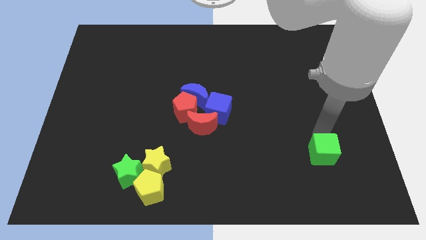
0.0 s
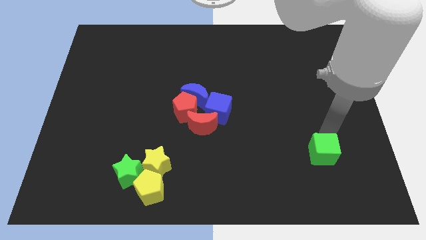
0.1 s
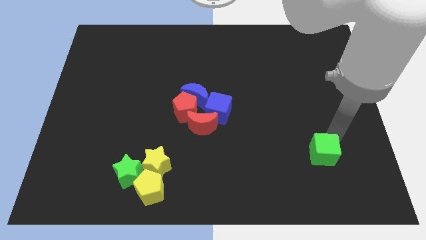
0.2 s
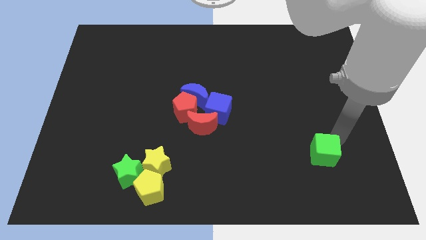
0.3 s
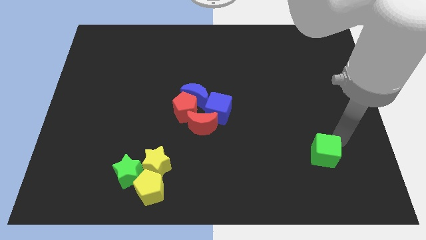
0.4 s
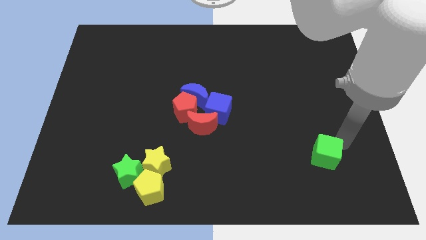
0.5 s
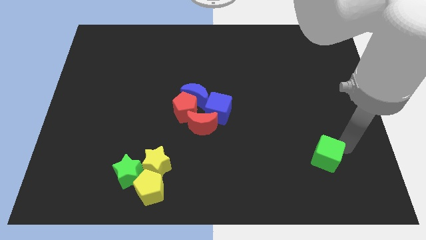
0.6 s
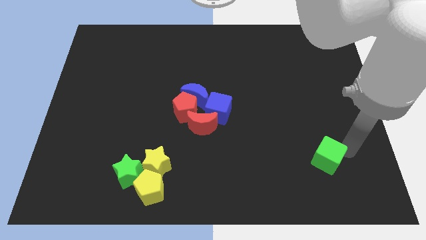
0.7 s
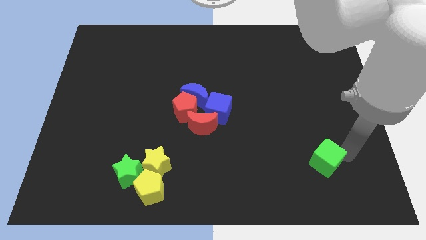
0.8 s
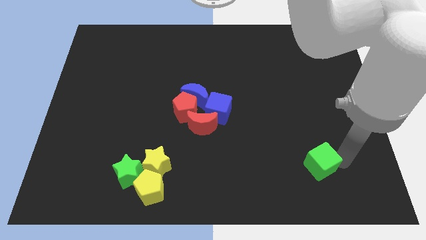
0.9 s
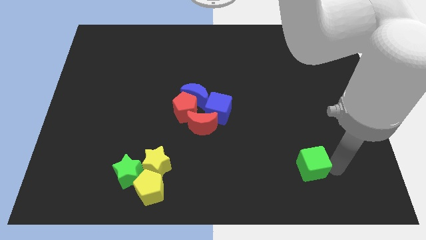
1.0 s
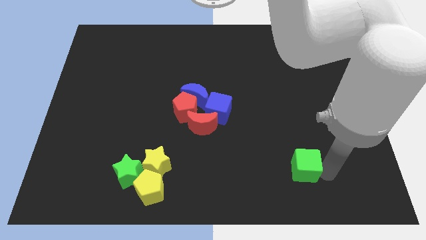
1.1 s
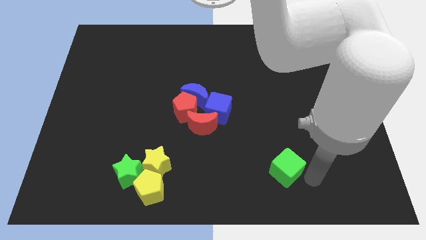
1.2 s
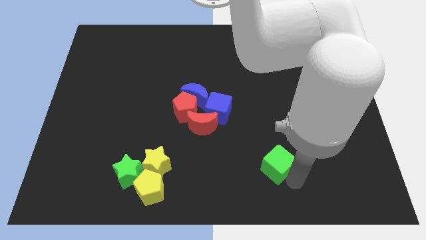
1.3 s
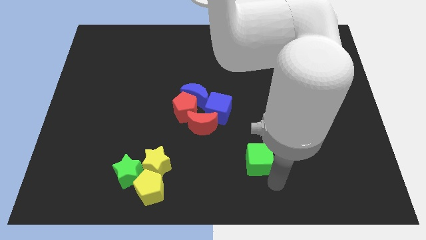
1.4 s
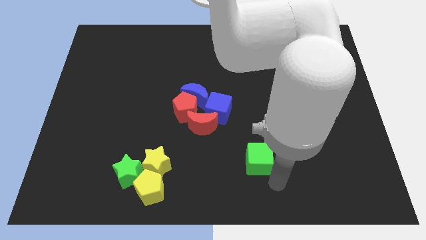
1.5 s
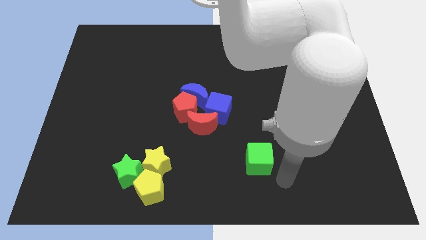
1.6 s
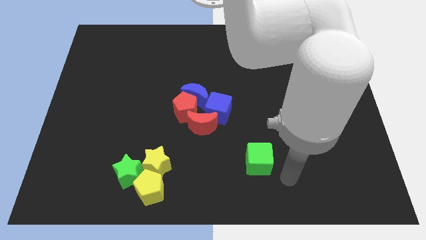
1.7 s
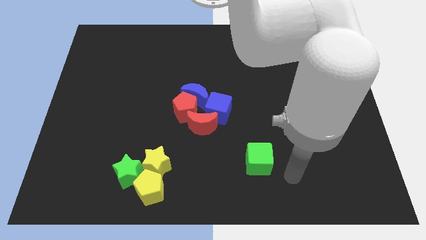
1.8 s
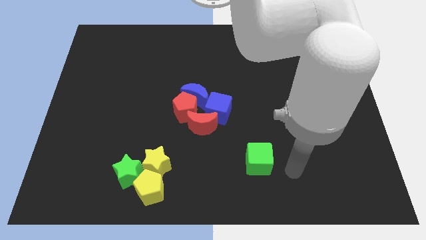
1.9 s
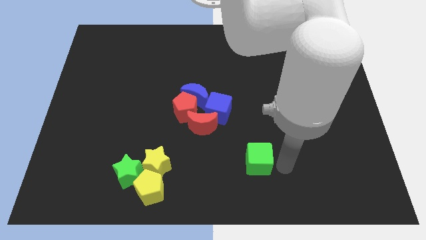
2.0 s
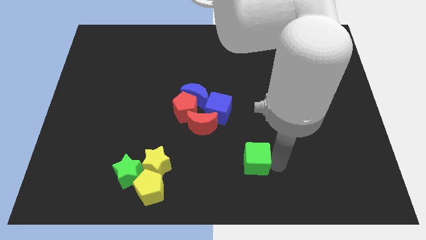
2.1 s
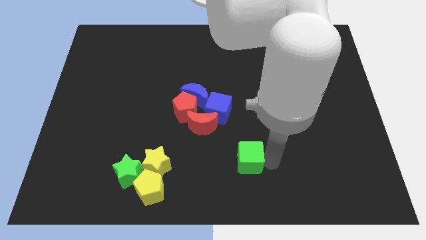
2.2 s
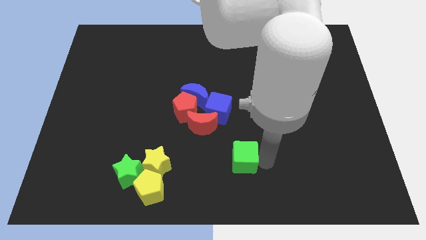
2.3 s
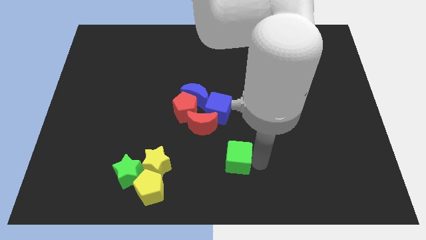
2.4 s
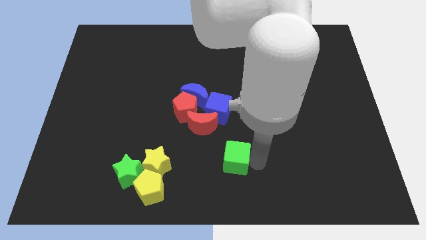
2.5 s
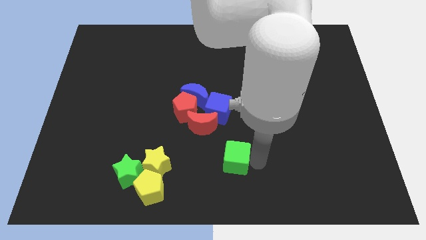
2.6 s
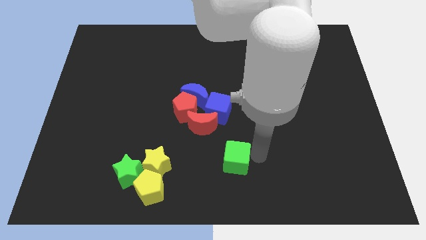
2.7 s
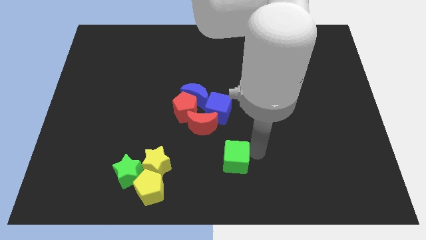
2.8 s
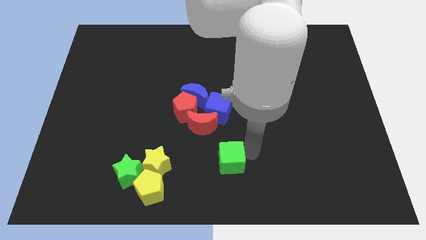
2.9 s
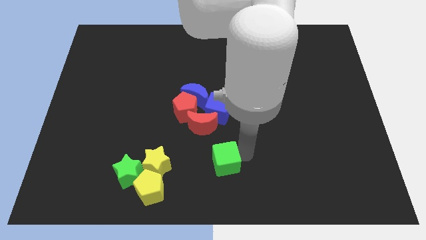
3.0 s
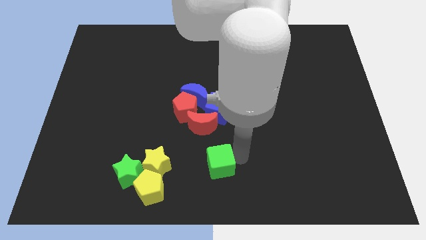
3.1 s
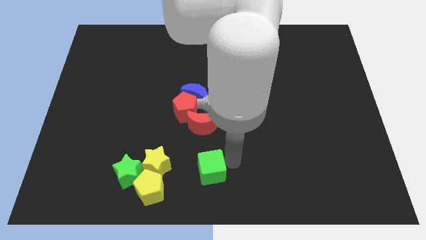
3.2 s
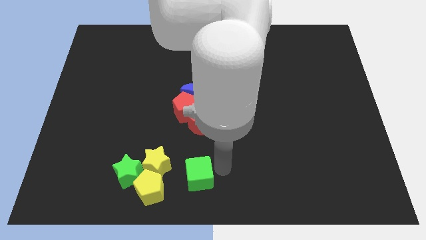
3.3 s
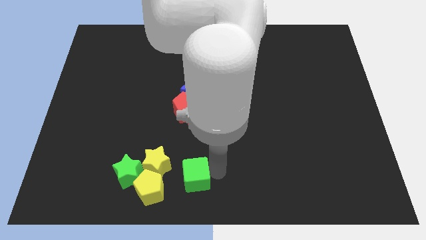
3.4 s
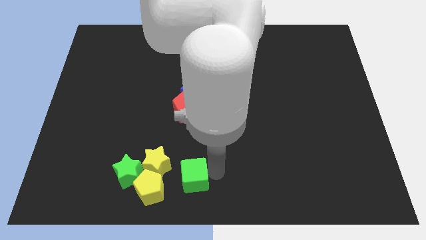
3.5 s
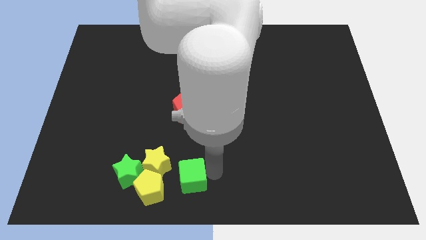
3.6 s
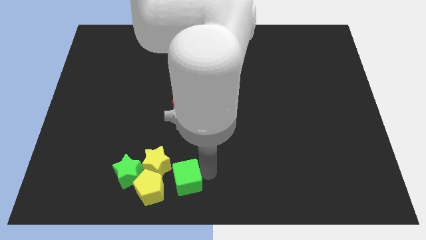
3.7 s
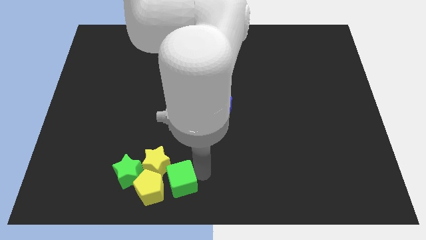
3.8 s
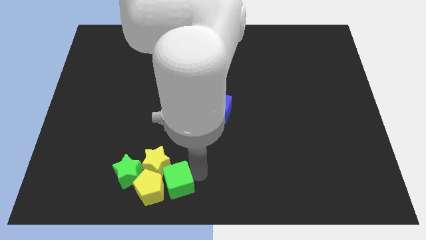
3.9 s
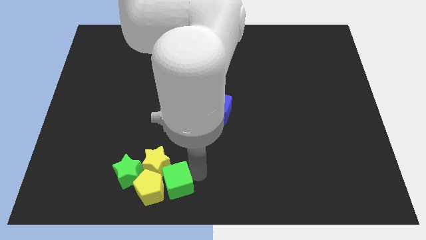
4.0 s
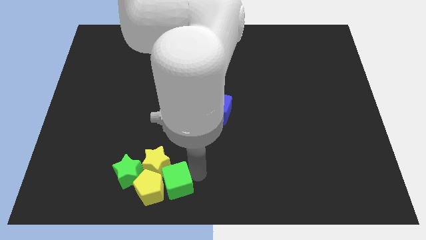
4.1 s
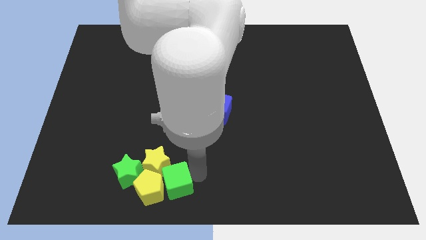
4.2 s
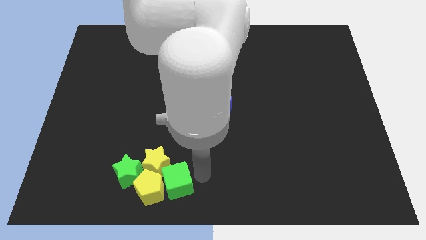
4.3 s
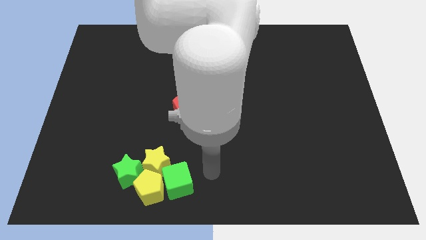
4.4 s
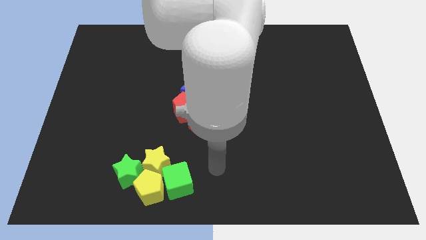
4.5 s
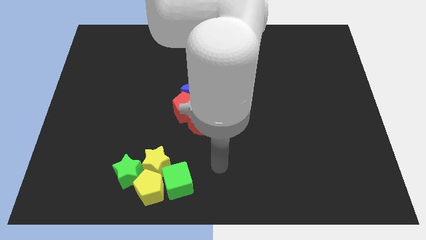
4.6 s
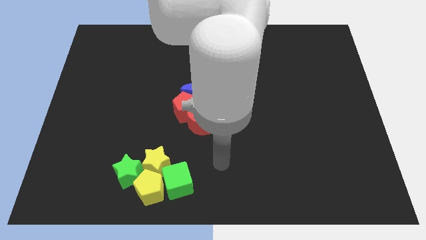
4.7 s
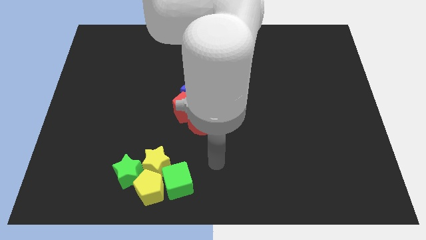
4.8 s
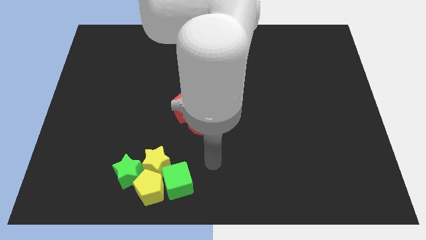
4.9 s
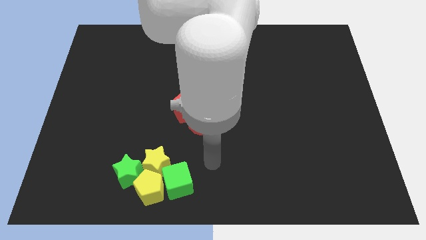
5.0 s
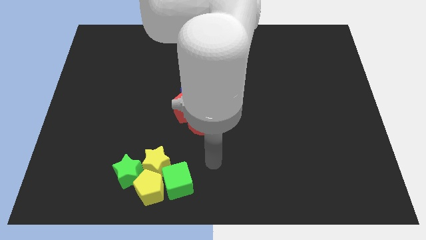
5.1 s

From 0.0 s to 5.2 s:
move the green cube to the right of the yellow pentagon

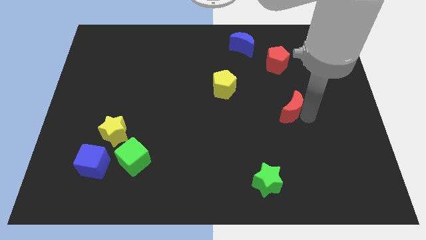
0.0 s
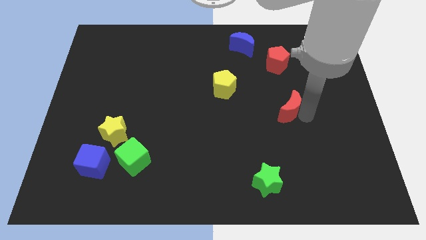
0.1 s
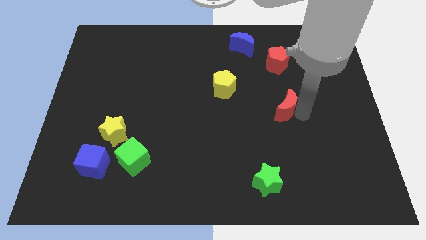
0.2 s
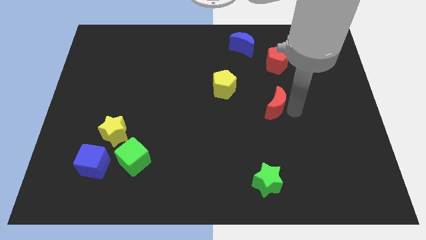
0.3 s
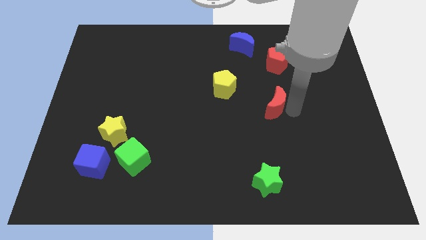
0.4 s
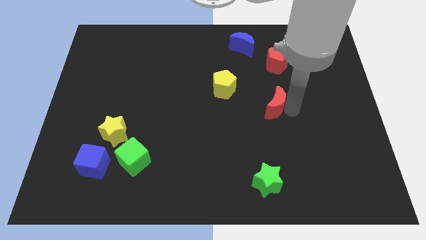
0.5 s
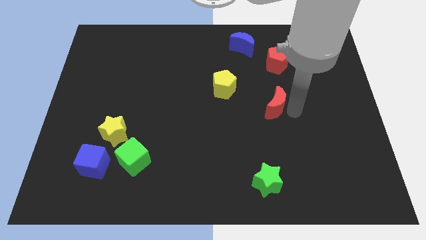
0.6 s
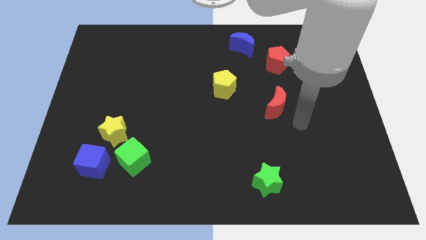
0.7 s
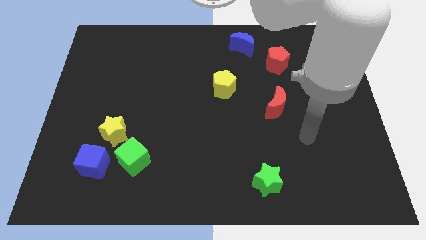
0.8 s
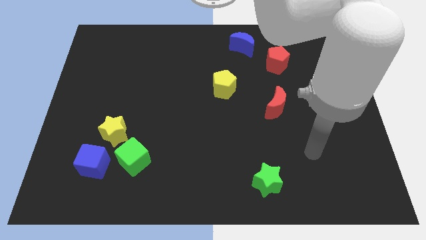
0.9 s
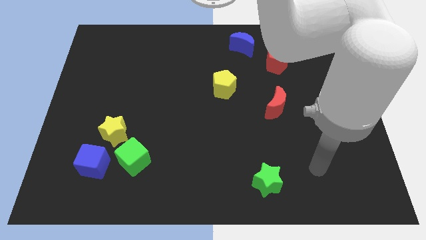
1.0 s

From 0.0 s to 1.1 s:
move the red moon below the red pentagon

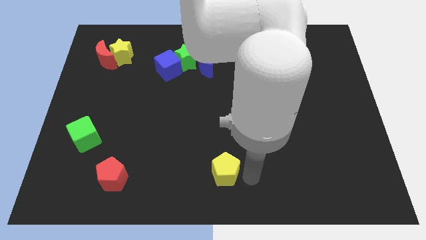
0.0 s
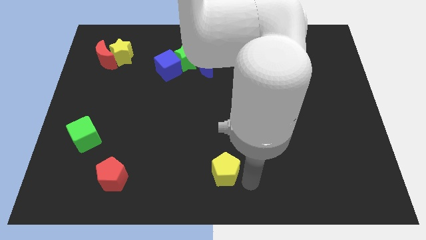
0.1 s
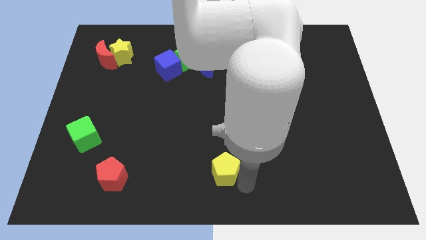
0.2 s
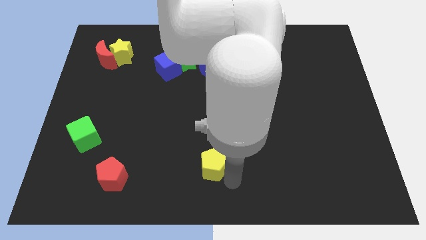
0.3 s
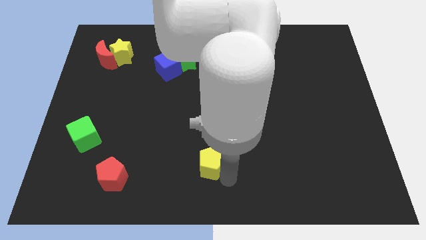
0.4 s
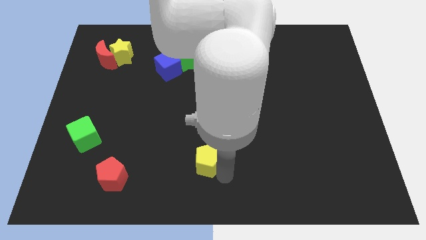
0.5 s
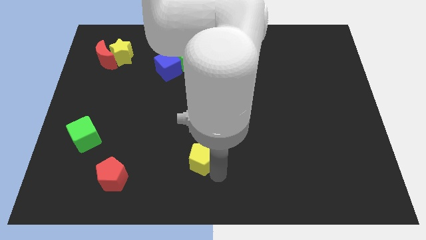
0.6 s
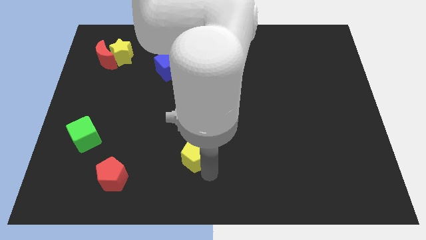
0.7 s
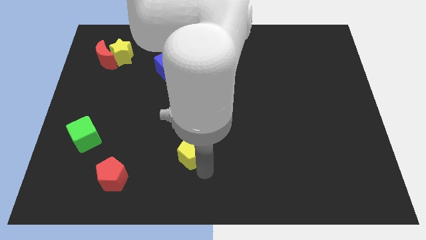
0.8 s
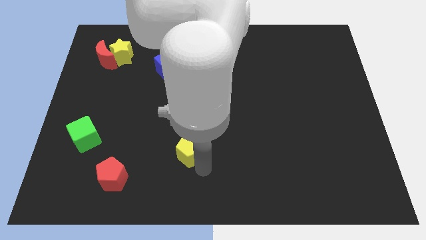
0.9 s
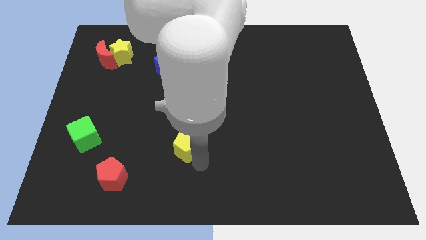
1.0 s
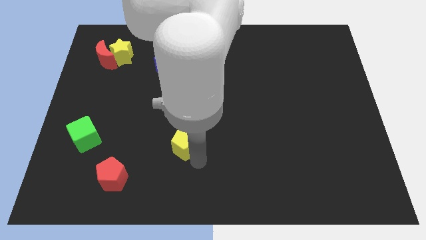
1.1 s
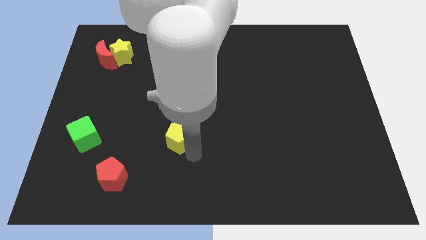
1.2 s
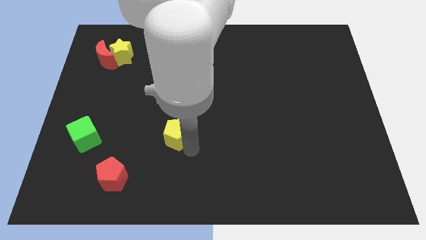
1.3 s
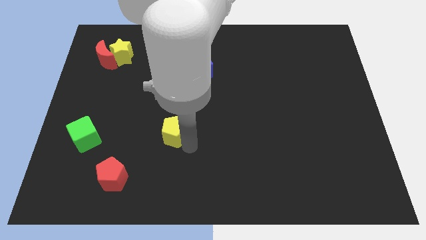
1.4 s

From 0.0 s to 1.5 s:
place the yellow pentagon at the top right of the red pentagon

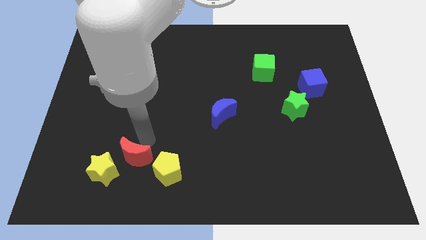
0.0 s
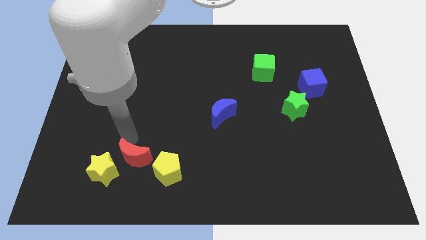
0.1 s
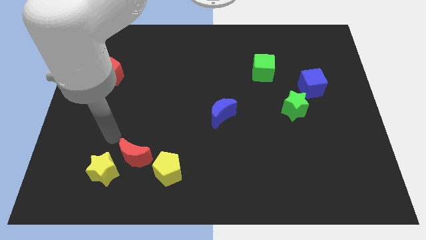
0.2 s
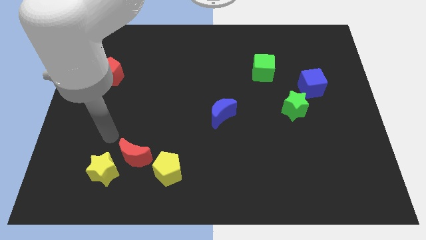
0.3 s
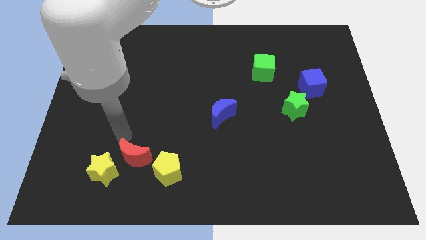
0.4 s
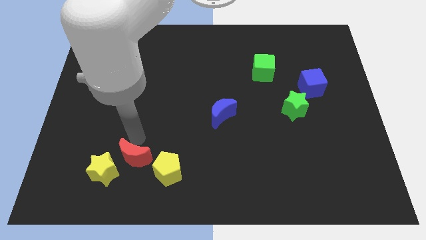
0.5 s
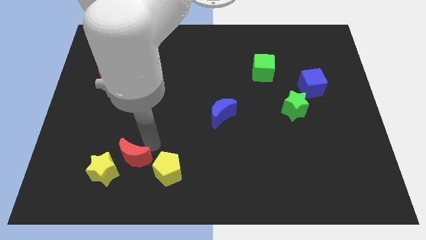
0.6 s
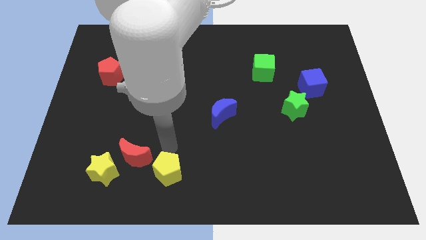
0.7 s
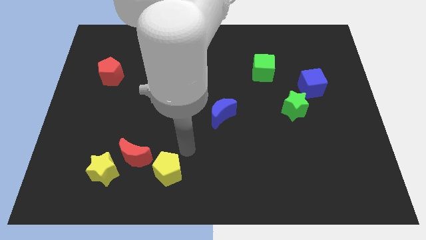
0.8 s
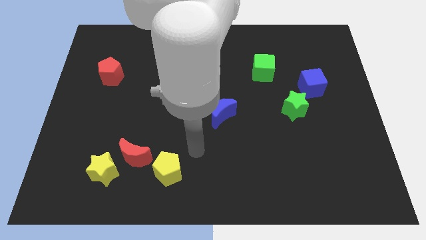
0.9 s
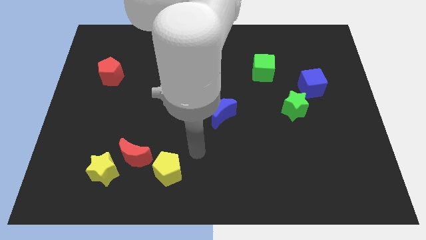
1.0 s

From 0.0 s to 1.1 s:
move your arm away from red moon
